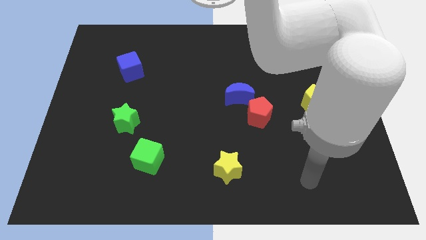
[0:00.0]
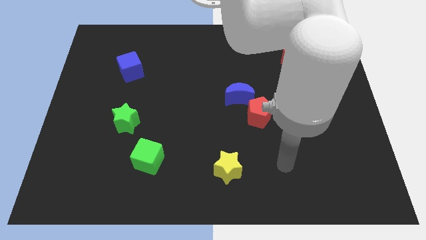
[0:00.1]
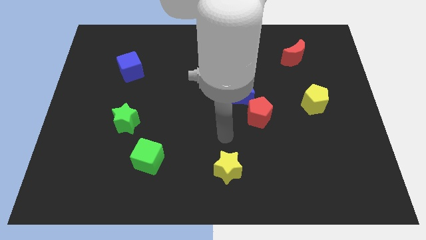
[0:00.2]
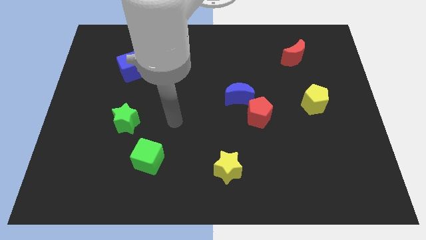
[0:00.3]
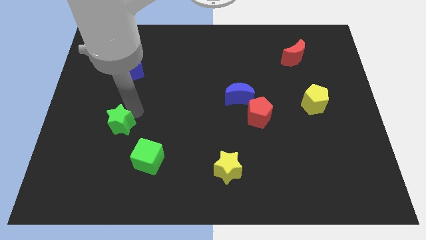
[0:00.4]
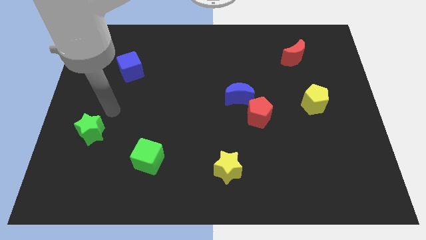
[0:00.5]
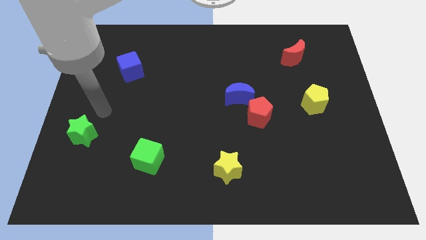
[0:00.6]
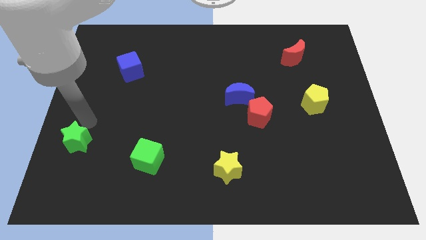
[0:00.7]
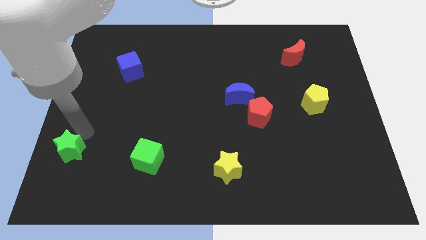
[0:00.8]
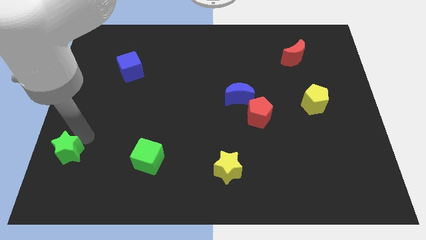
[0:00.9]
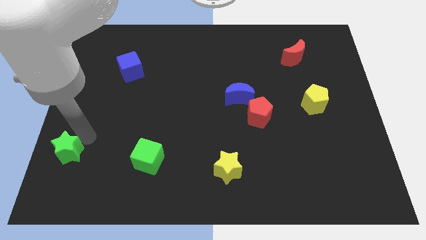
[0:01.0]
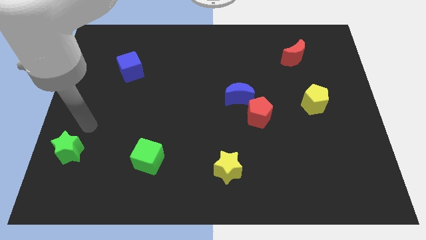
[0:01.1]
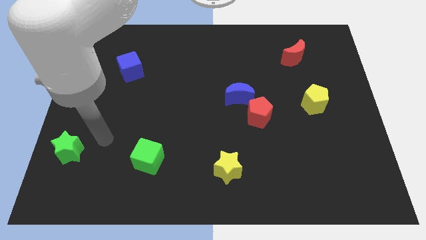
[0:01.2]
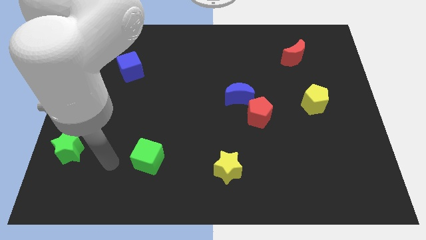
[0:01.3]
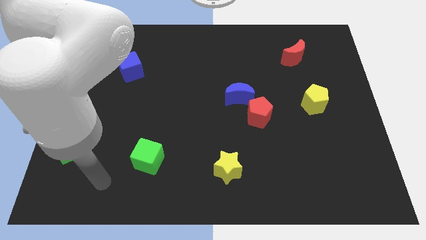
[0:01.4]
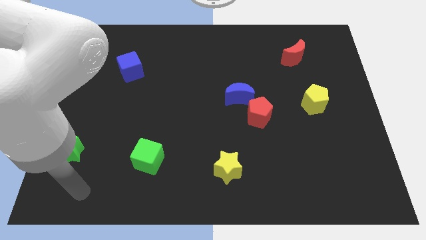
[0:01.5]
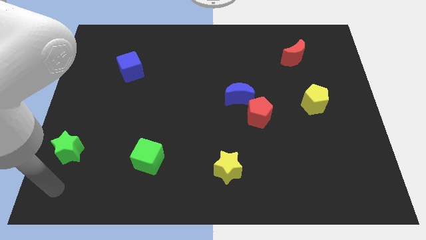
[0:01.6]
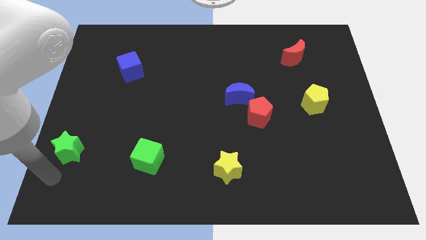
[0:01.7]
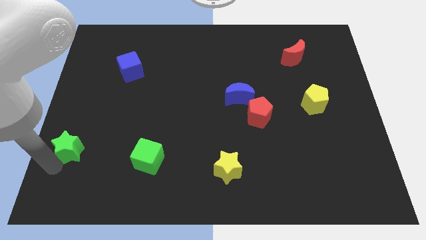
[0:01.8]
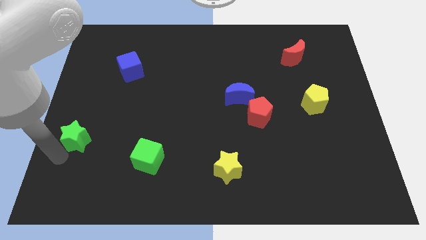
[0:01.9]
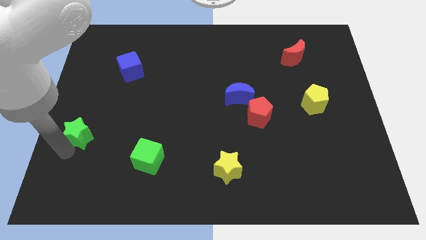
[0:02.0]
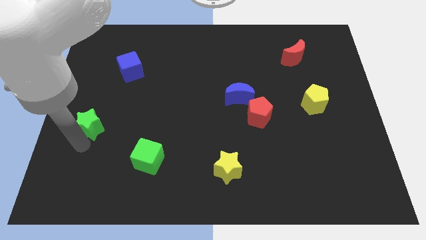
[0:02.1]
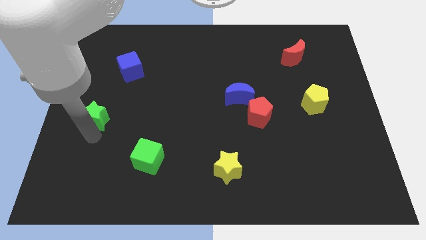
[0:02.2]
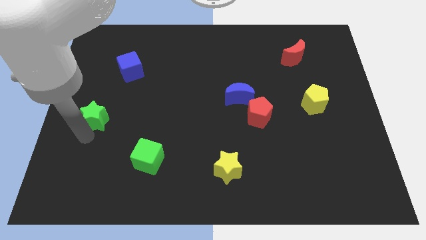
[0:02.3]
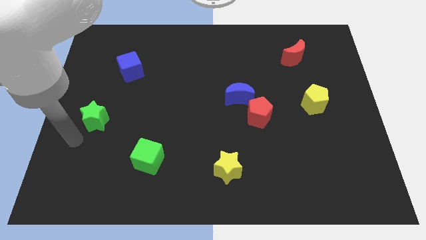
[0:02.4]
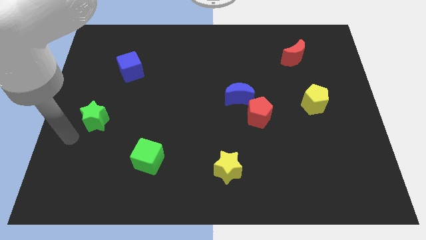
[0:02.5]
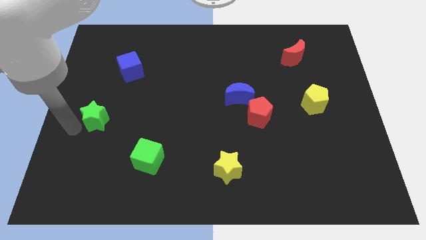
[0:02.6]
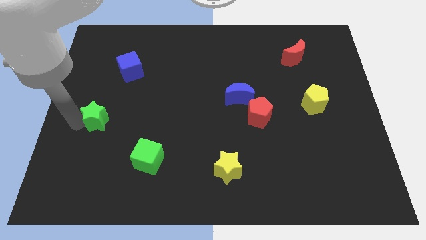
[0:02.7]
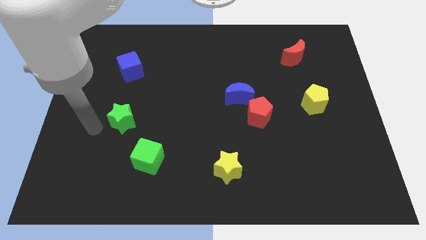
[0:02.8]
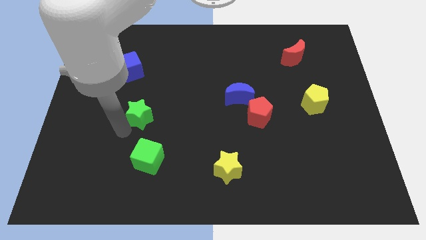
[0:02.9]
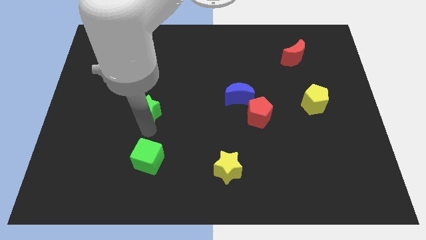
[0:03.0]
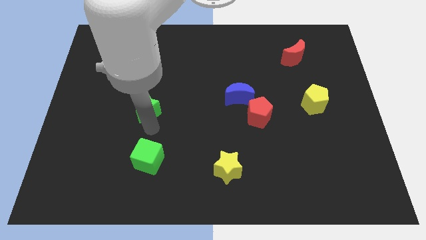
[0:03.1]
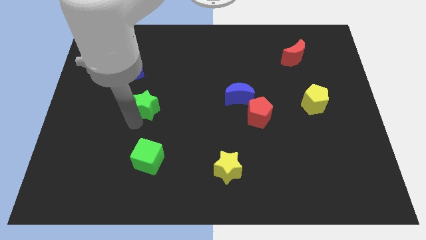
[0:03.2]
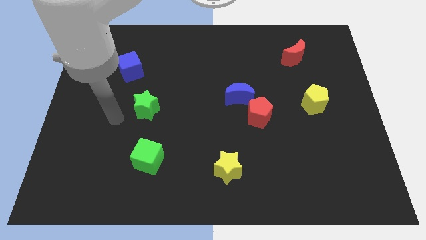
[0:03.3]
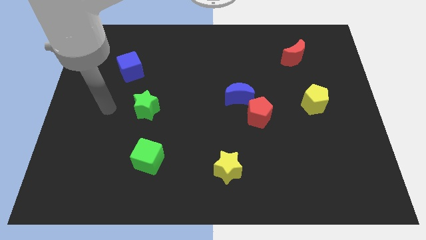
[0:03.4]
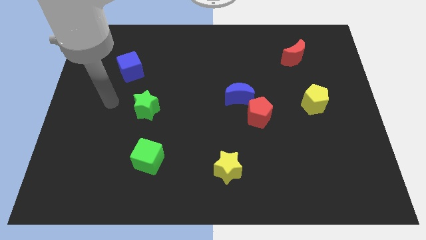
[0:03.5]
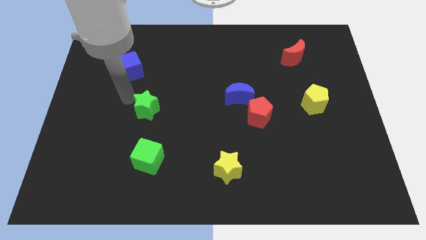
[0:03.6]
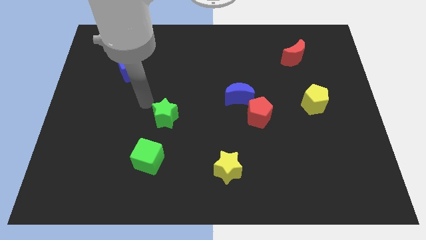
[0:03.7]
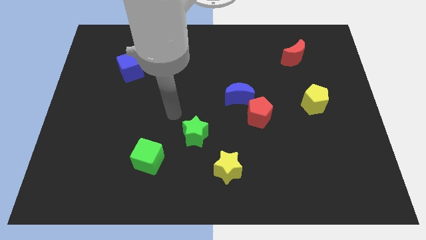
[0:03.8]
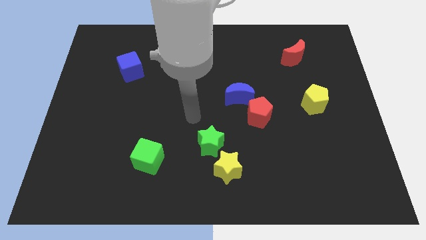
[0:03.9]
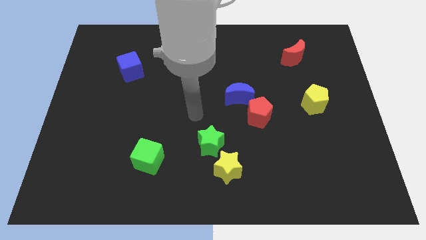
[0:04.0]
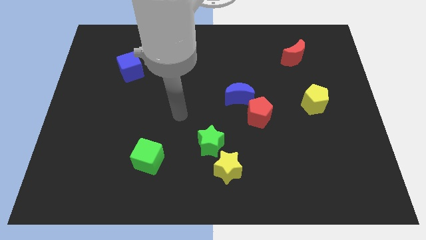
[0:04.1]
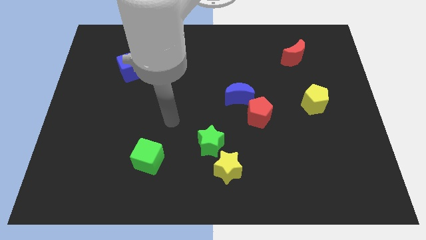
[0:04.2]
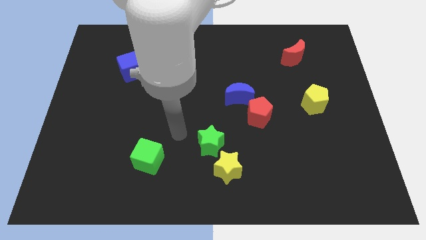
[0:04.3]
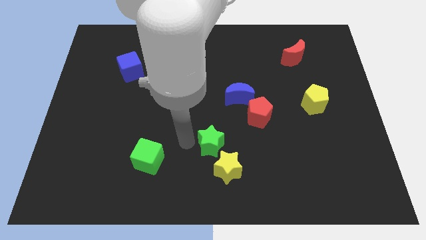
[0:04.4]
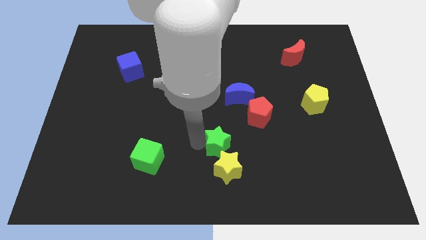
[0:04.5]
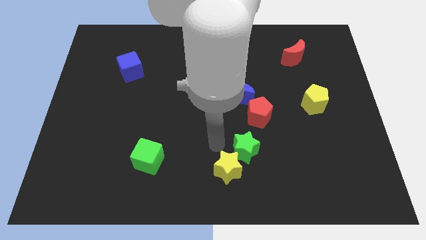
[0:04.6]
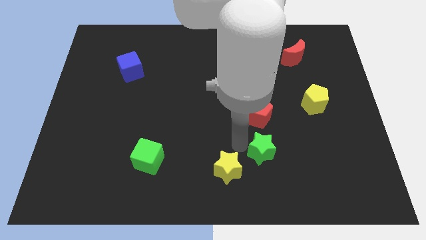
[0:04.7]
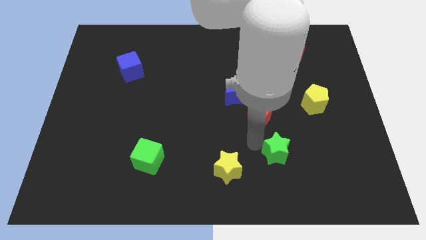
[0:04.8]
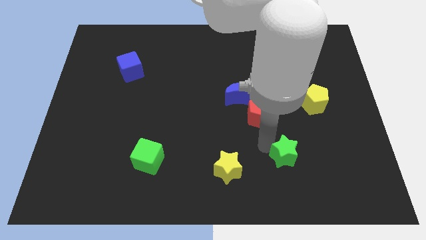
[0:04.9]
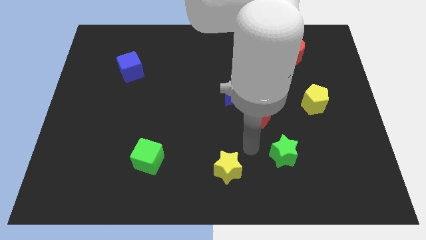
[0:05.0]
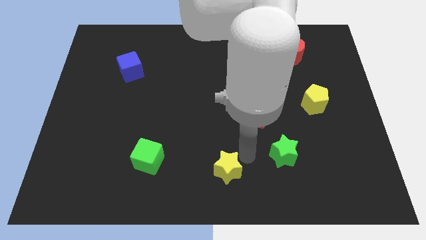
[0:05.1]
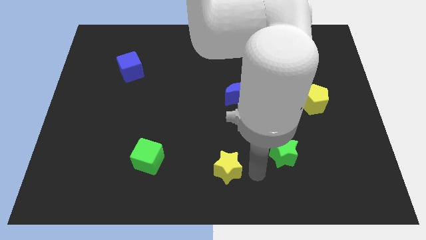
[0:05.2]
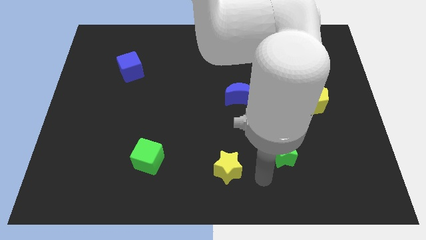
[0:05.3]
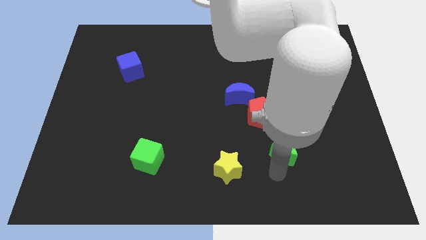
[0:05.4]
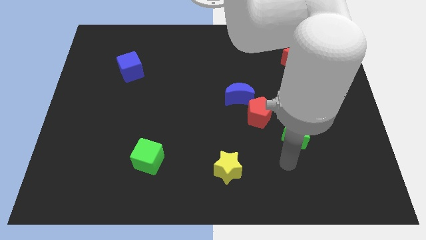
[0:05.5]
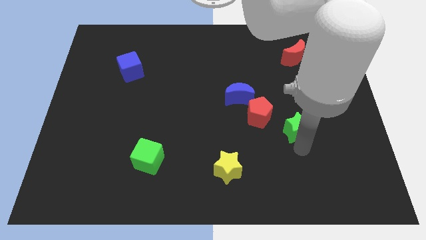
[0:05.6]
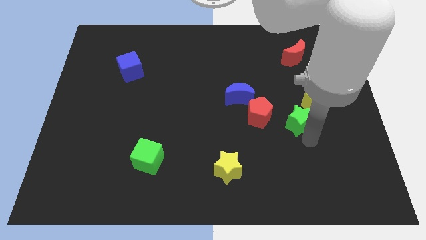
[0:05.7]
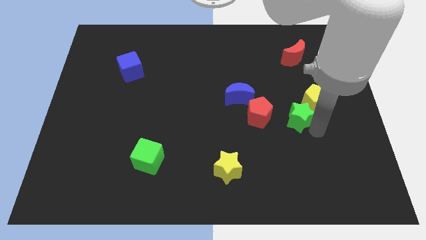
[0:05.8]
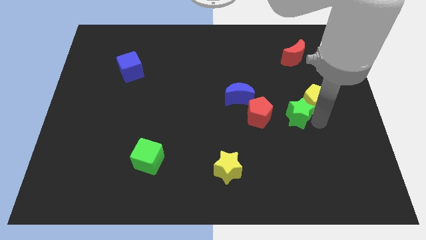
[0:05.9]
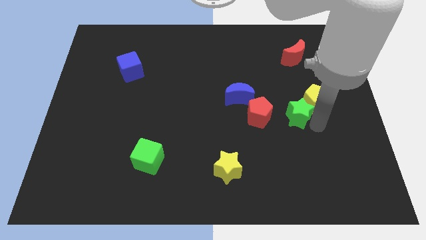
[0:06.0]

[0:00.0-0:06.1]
move the green star close to the yellow pentagon

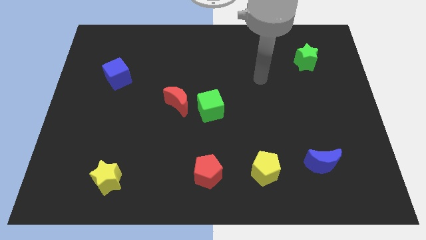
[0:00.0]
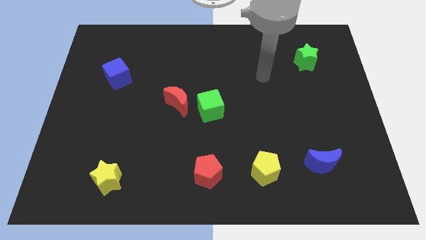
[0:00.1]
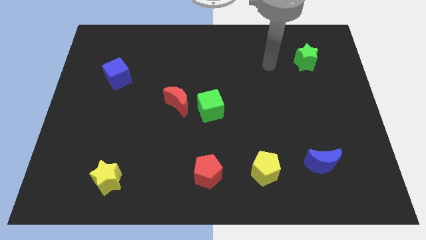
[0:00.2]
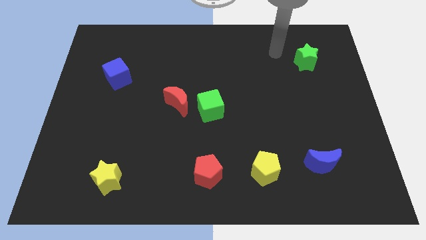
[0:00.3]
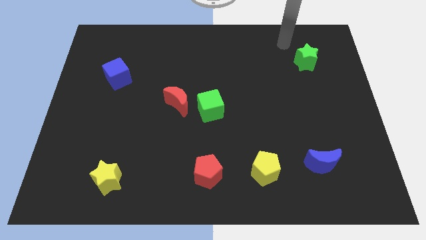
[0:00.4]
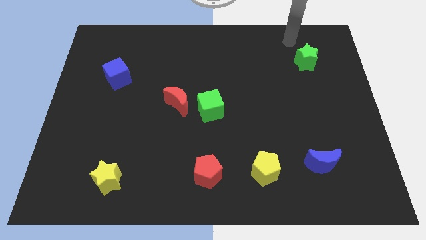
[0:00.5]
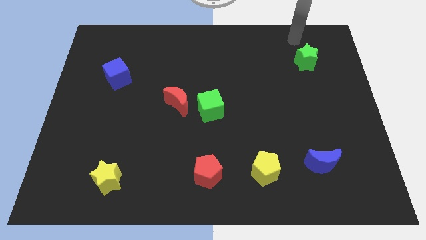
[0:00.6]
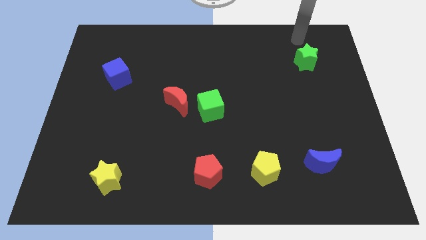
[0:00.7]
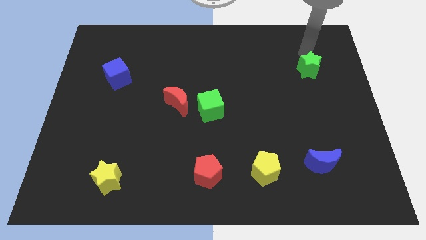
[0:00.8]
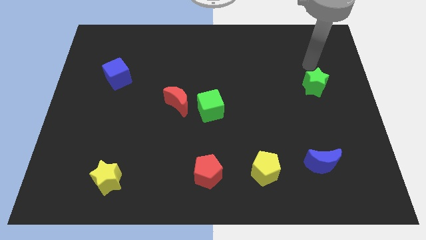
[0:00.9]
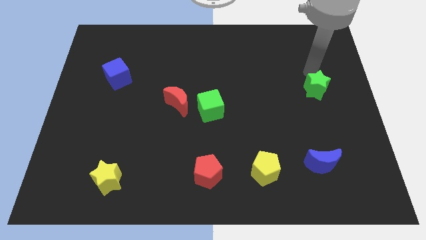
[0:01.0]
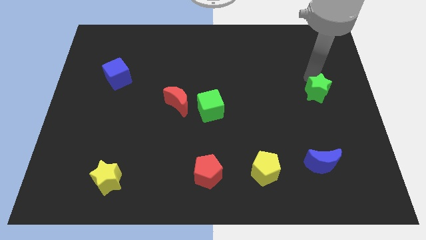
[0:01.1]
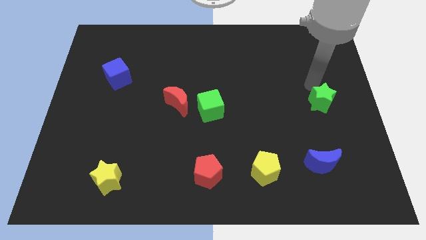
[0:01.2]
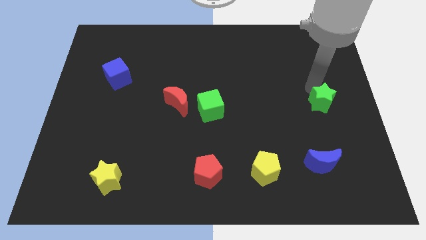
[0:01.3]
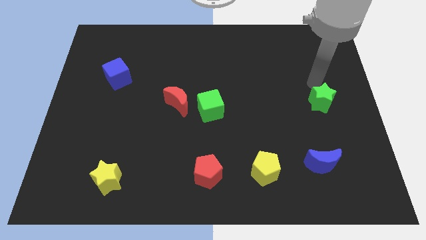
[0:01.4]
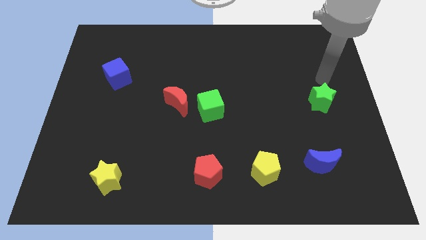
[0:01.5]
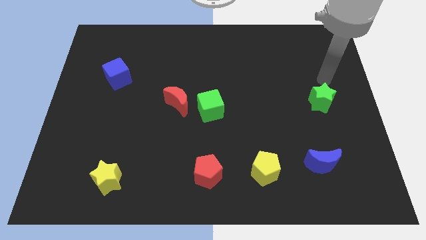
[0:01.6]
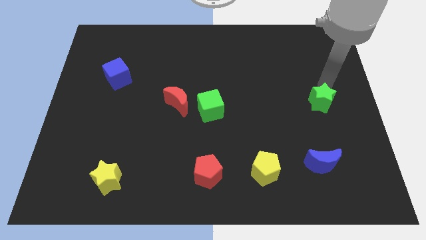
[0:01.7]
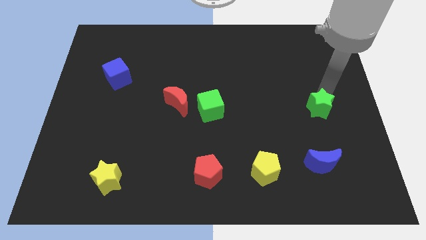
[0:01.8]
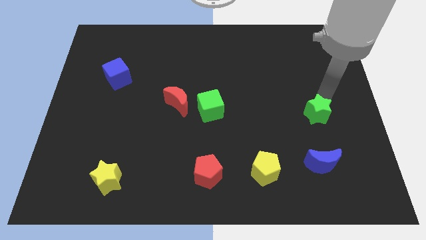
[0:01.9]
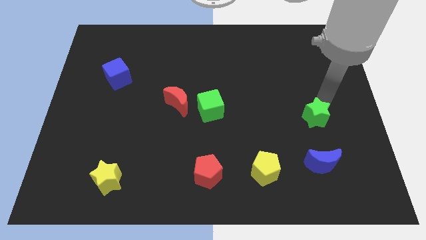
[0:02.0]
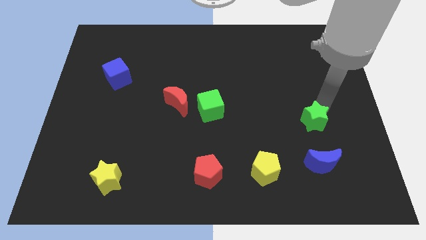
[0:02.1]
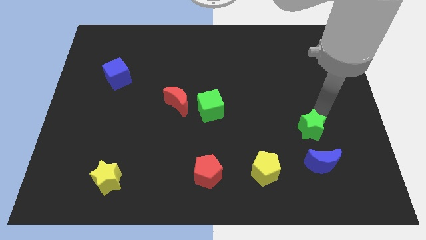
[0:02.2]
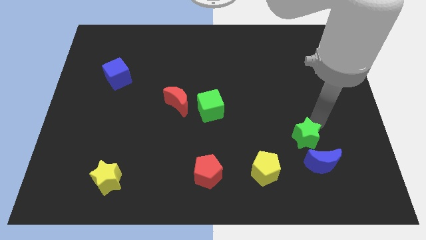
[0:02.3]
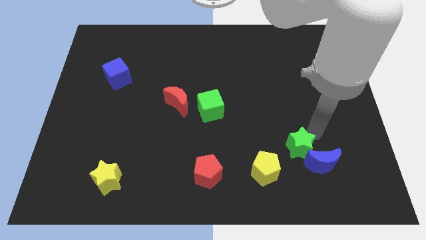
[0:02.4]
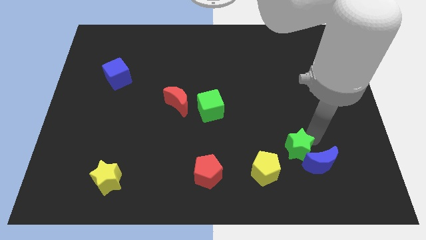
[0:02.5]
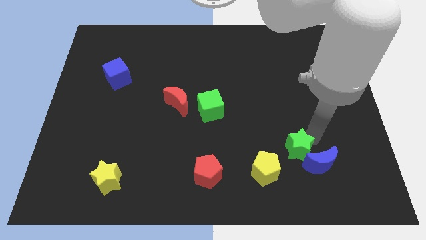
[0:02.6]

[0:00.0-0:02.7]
slide the green star close to the blue moon
